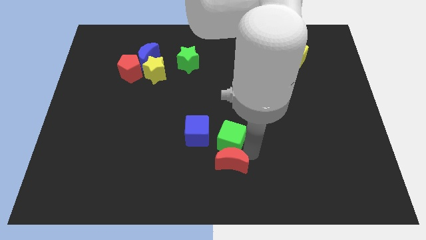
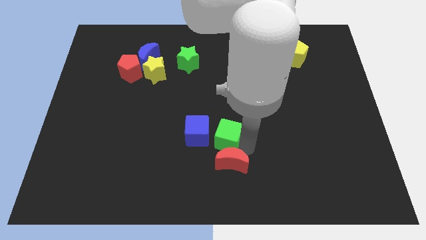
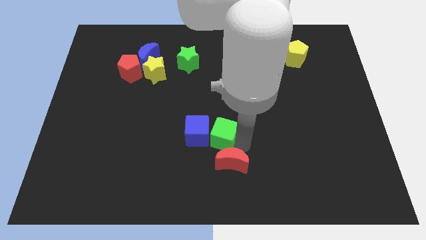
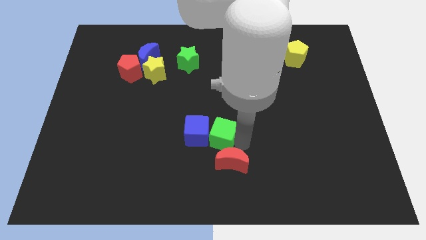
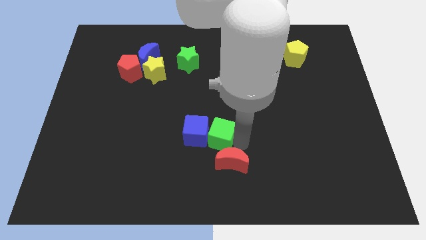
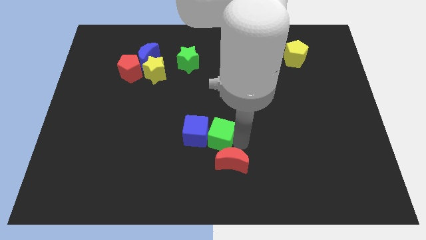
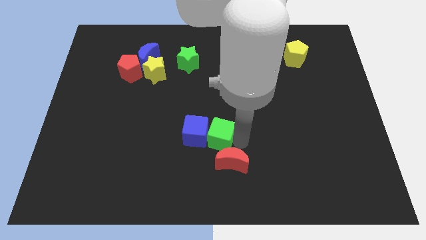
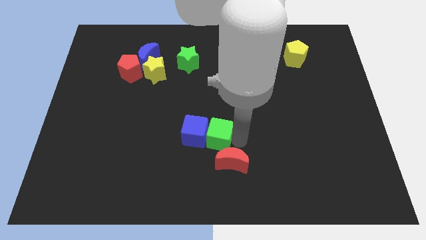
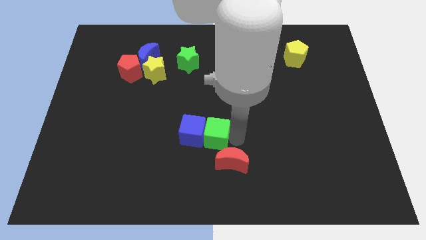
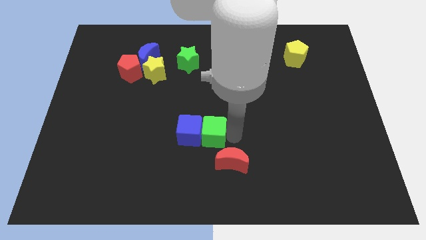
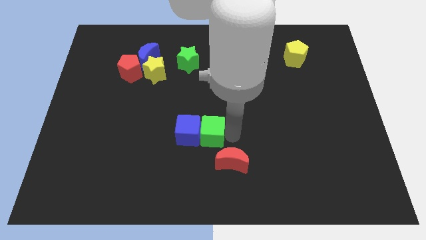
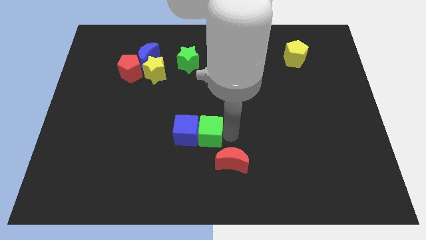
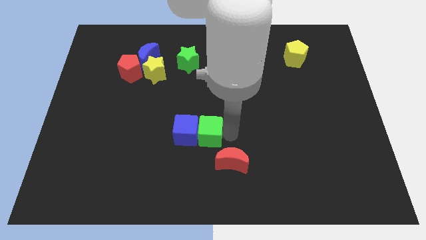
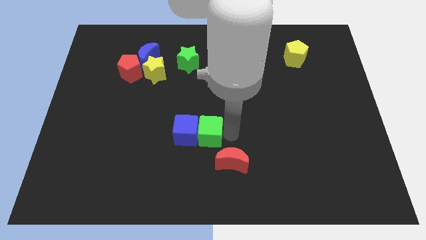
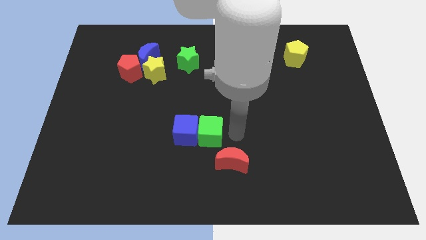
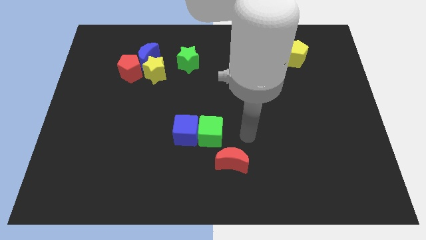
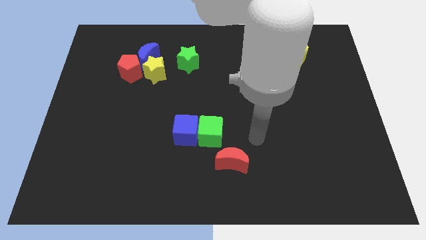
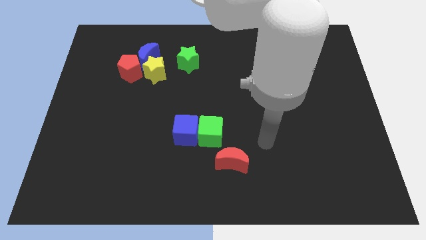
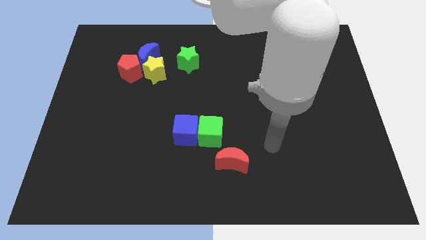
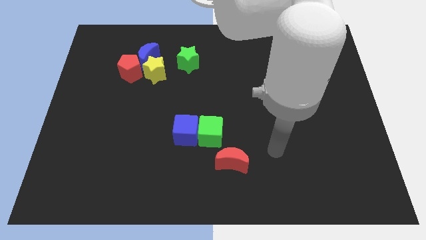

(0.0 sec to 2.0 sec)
move the green cube into the blue cube

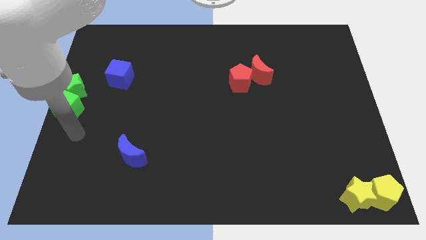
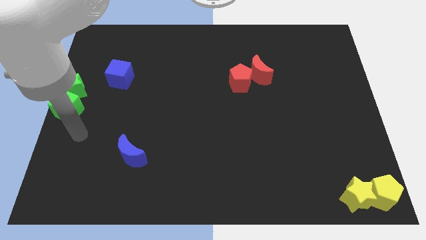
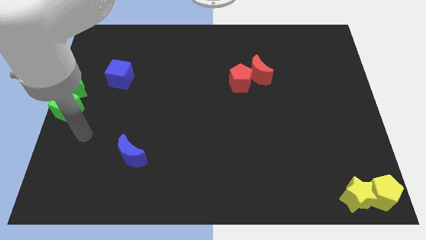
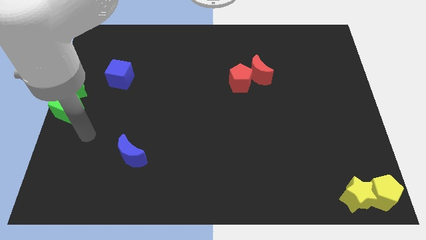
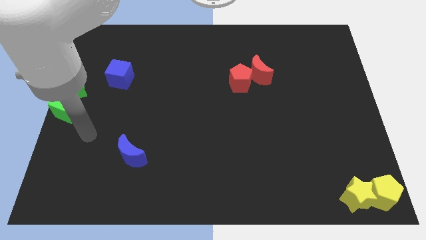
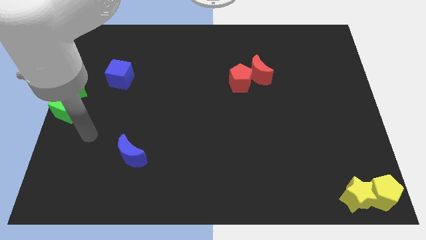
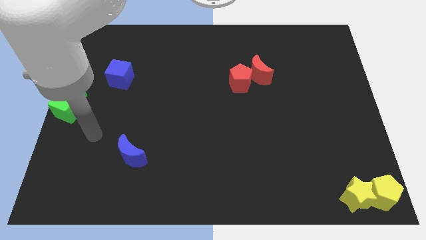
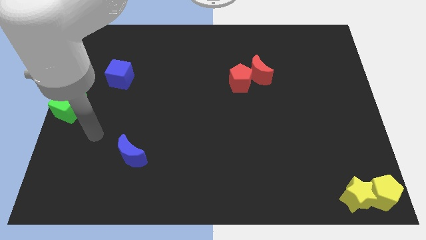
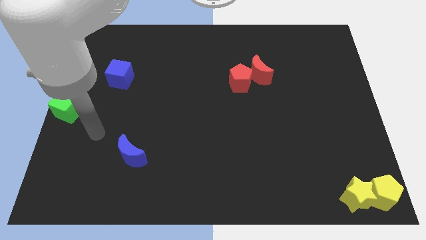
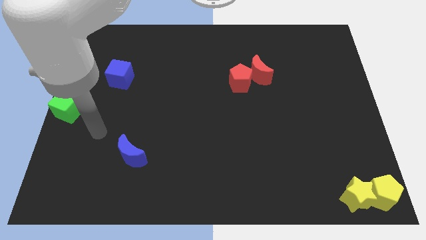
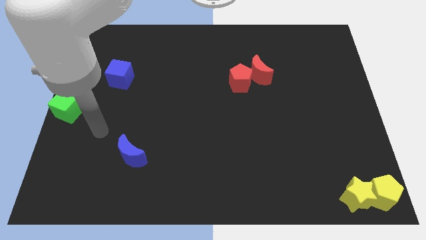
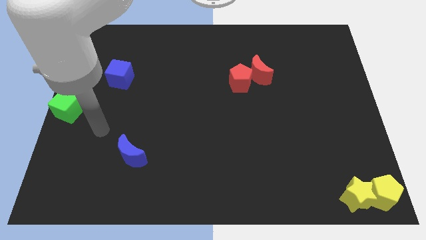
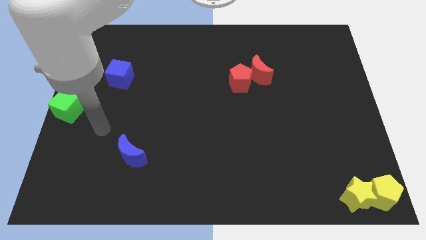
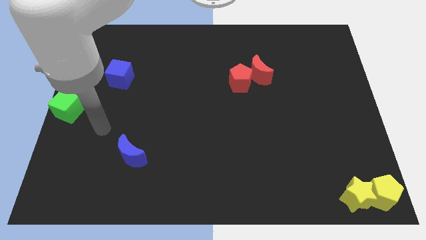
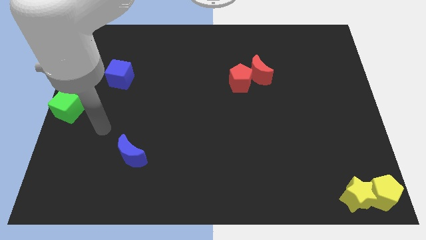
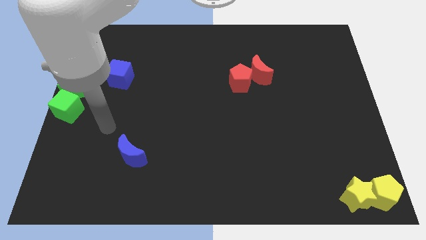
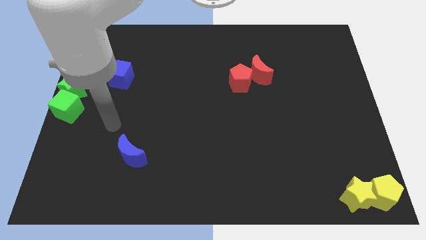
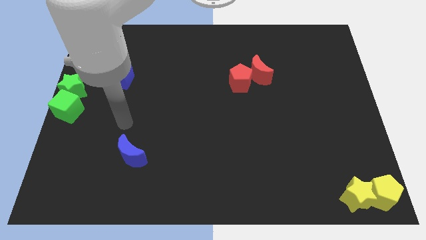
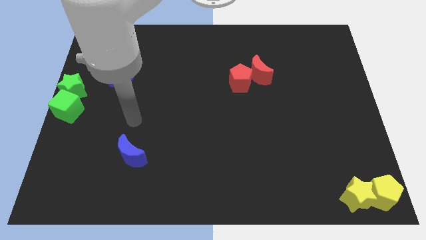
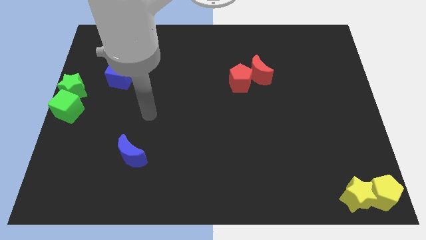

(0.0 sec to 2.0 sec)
move the arm towards the top of the blue crescent

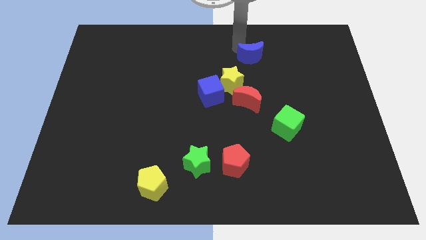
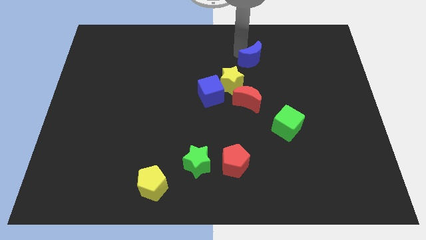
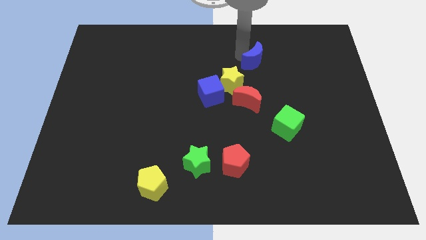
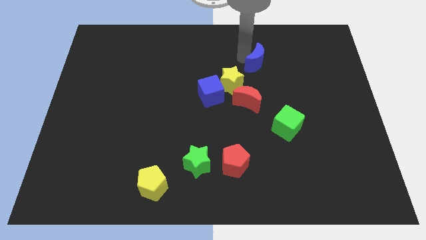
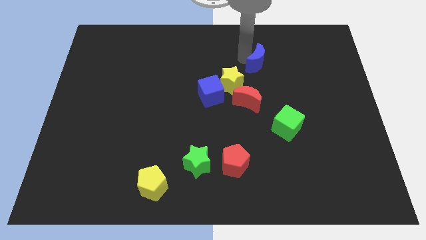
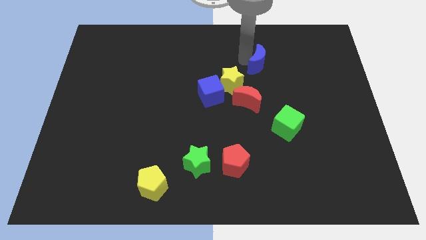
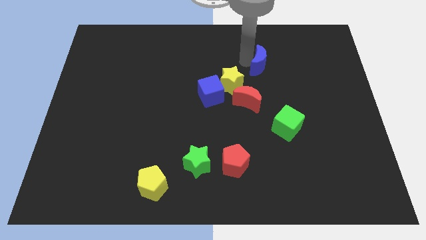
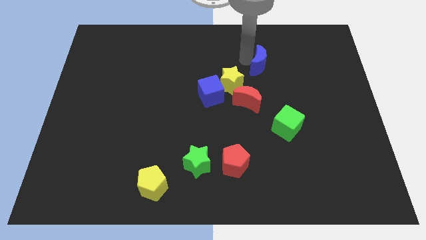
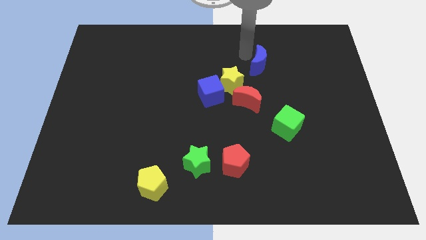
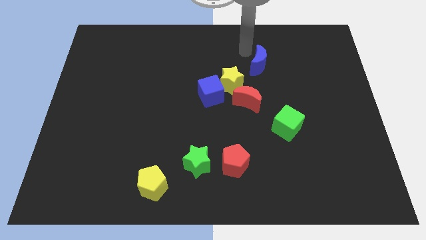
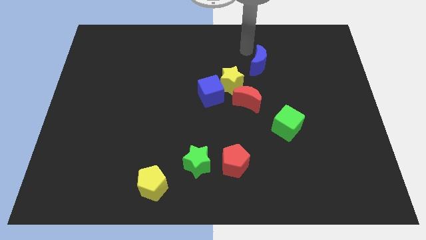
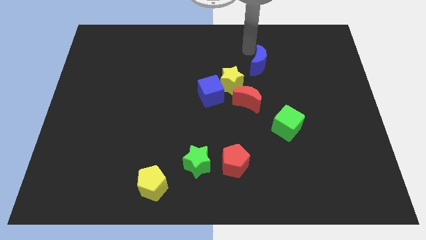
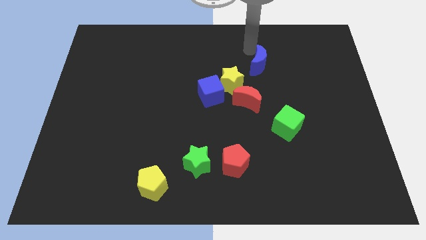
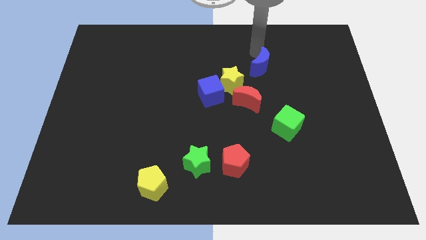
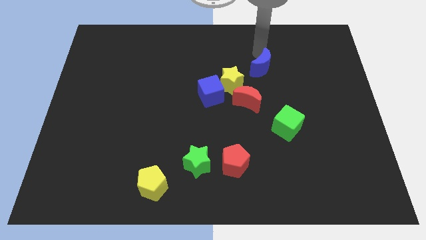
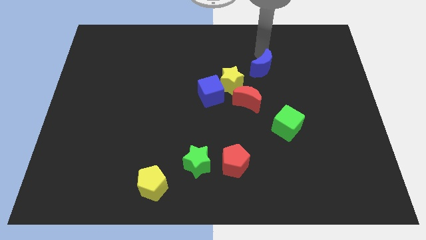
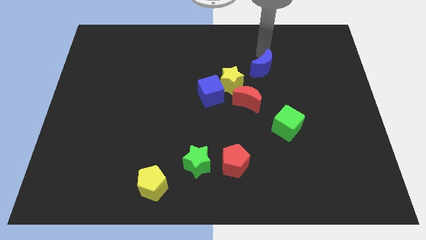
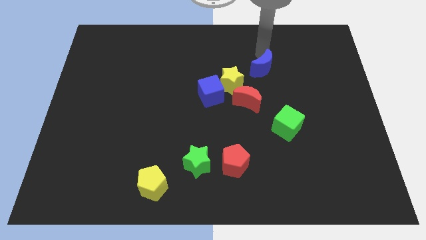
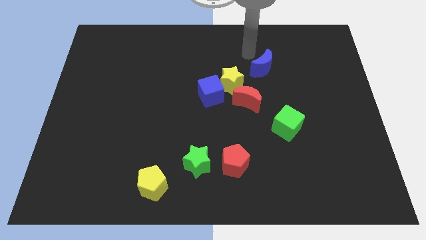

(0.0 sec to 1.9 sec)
place the blue crescent to the top right of the yellow star

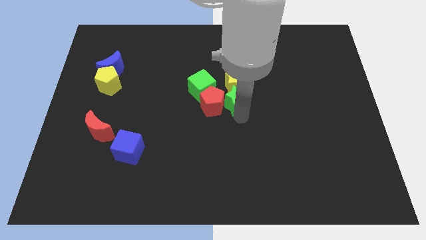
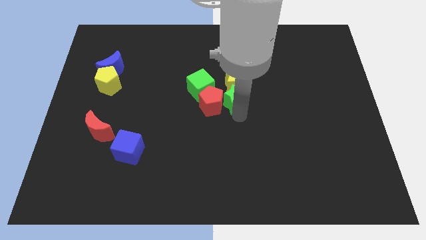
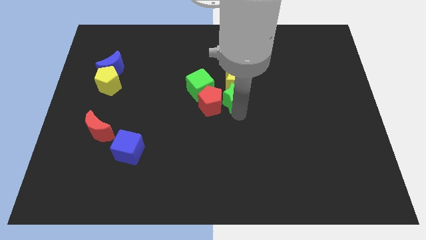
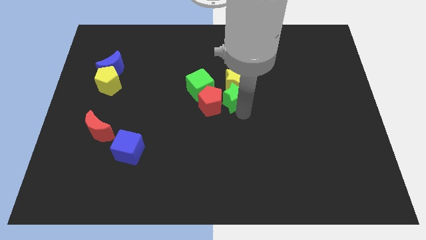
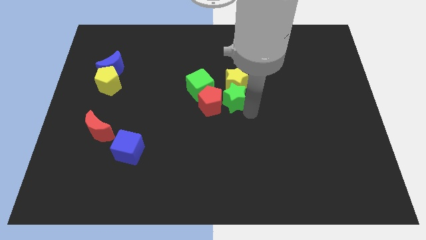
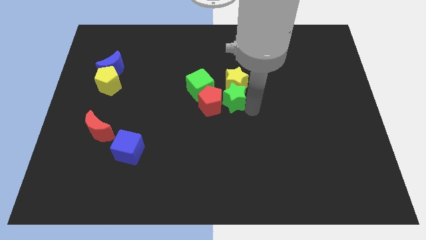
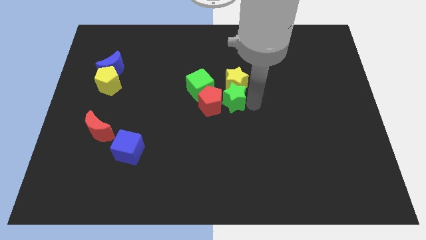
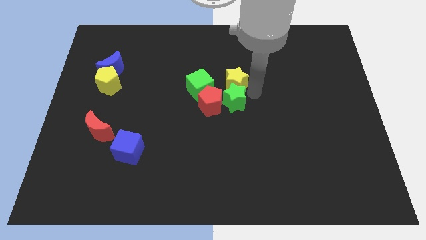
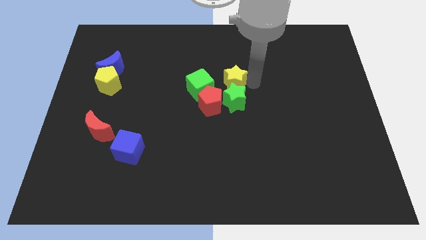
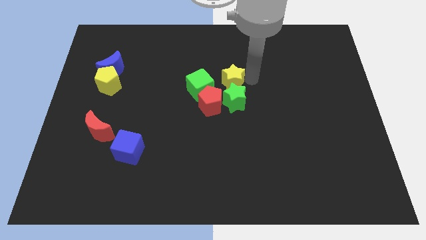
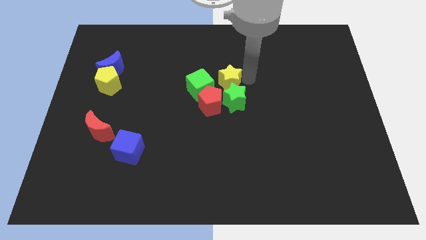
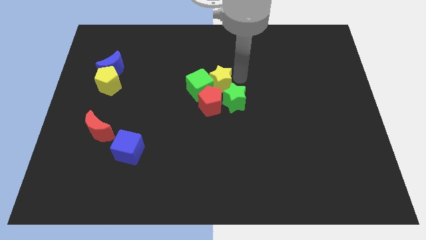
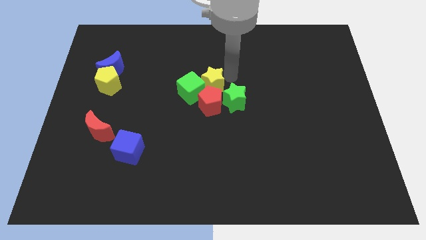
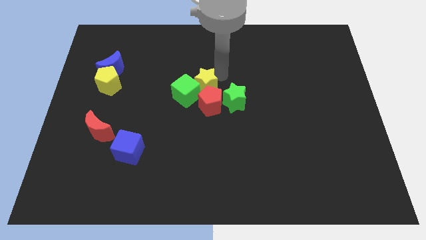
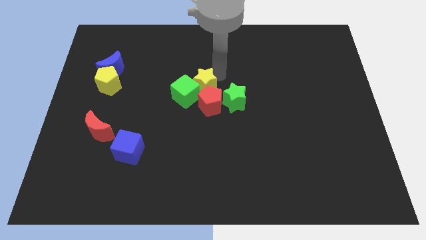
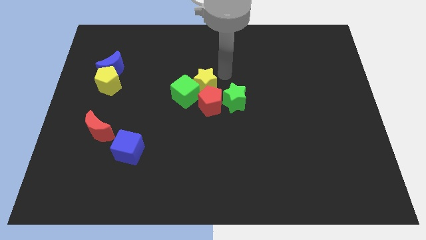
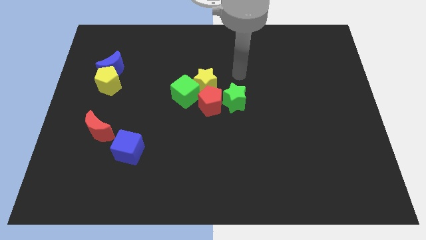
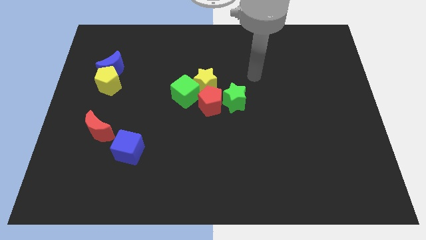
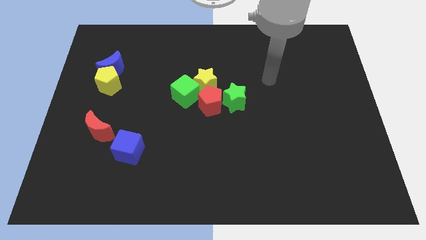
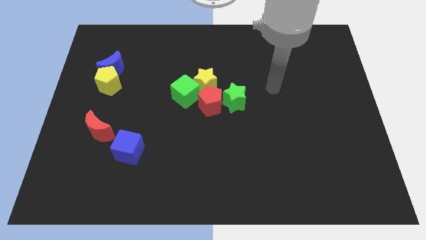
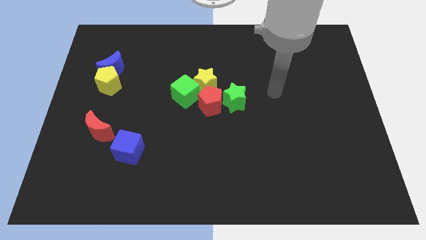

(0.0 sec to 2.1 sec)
push the yellow star and green cube diagonal left of red pentagon

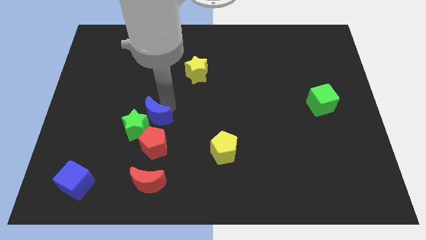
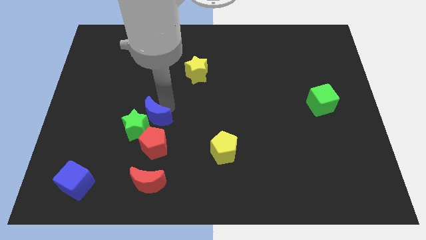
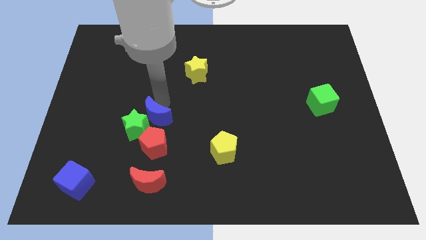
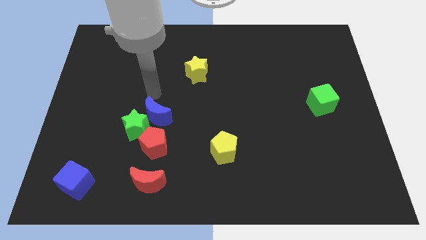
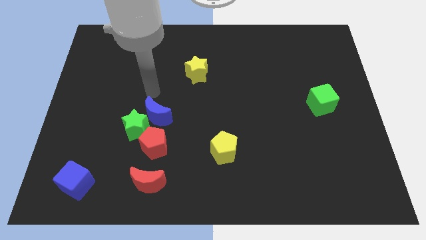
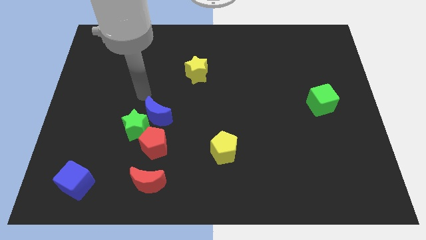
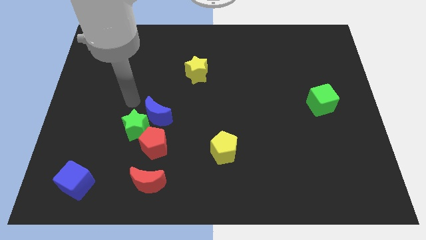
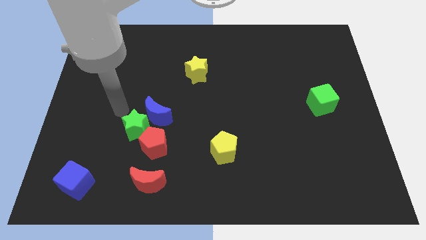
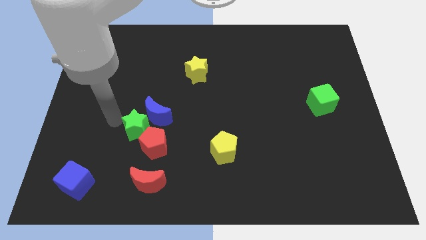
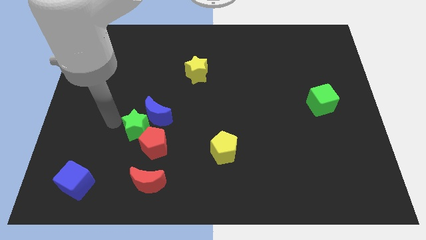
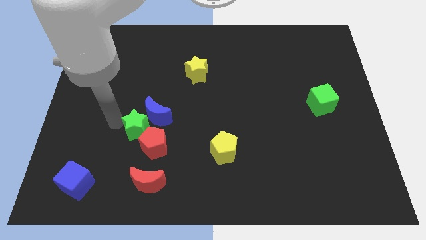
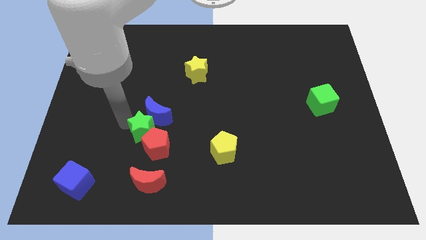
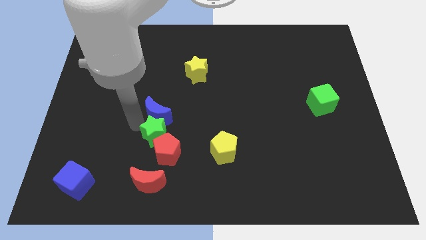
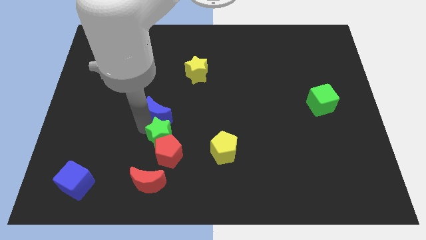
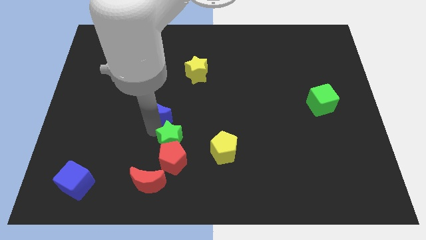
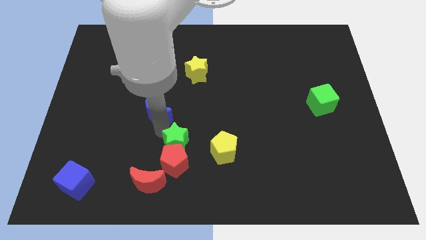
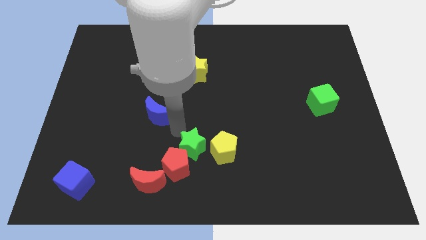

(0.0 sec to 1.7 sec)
make a diagonal line out of red blocks and the green star
